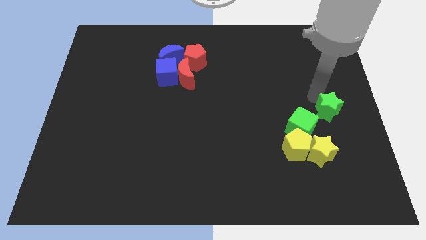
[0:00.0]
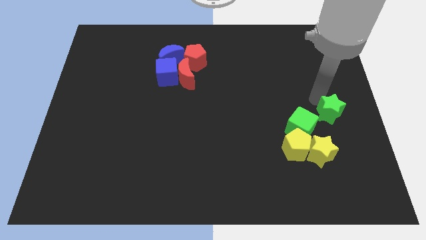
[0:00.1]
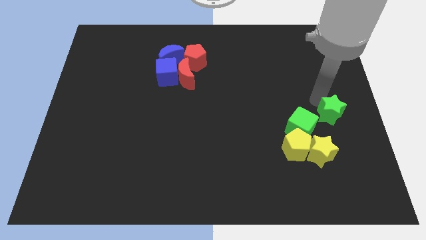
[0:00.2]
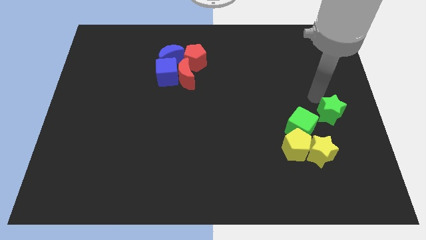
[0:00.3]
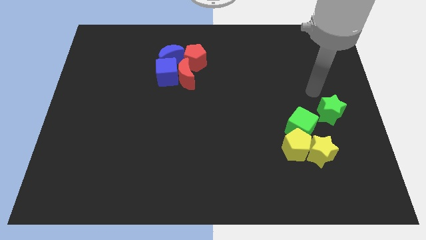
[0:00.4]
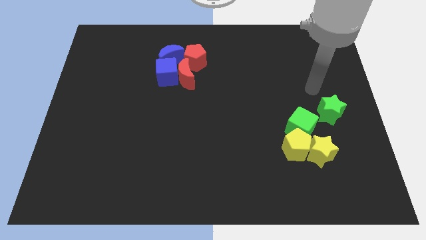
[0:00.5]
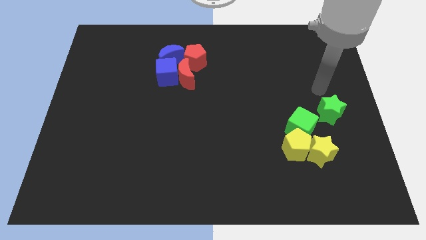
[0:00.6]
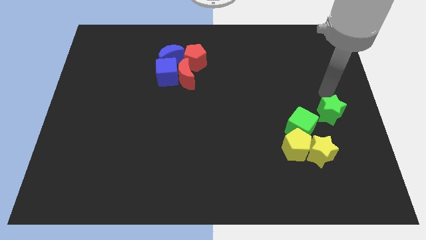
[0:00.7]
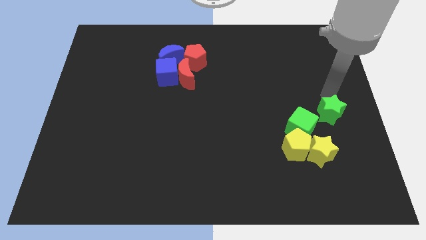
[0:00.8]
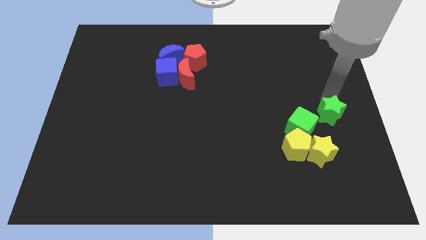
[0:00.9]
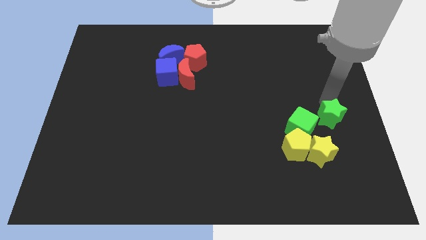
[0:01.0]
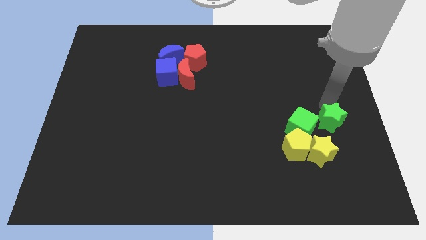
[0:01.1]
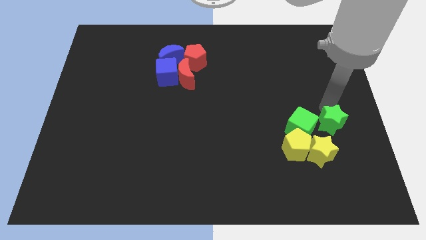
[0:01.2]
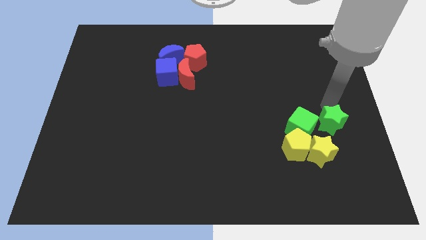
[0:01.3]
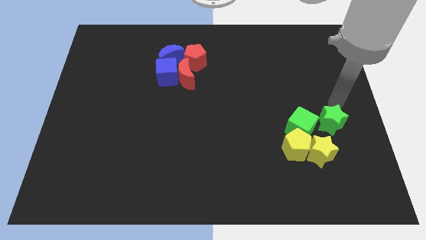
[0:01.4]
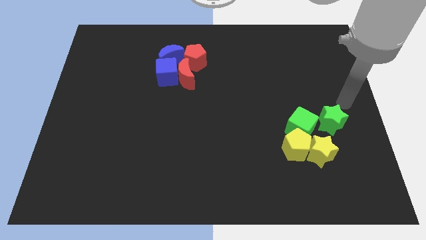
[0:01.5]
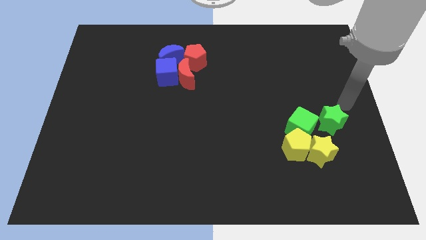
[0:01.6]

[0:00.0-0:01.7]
place the green star right to the green cube

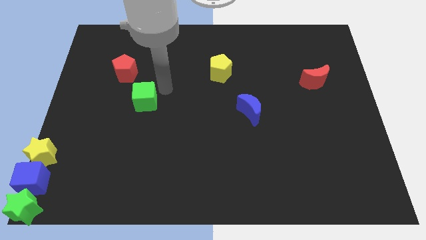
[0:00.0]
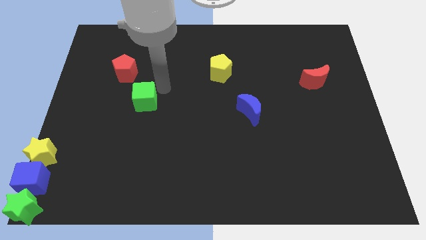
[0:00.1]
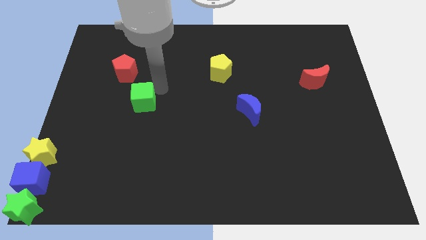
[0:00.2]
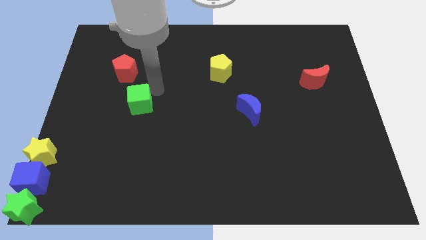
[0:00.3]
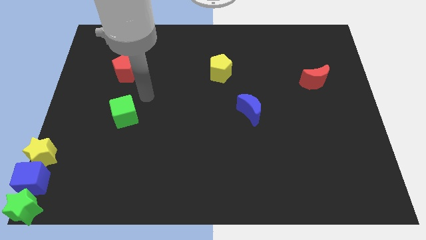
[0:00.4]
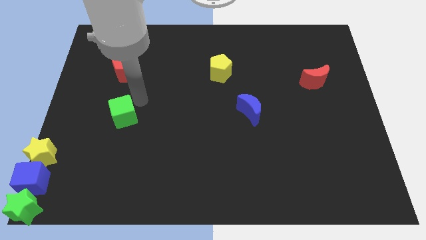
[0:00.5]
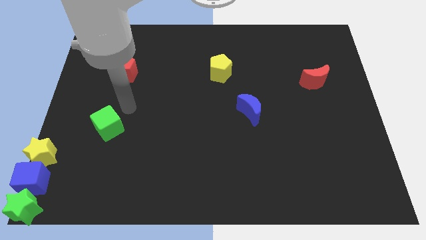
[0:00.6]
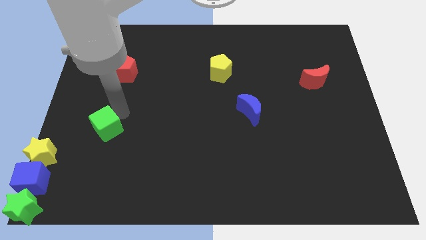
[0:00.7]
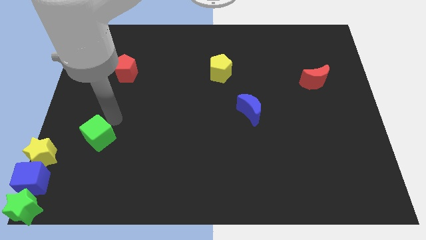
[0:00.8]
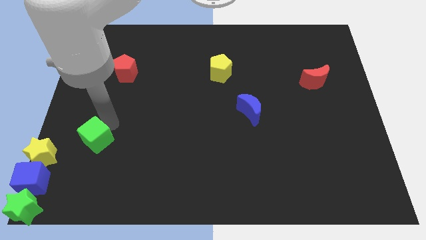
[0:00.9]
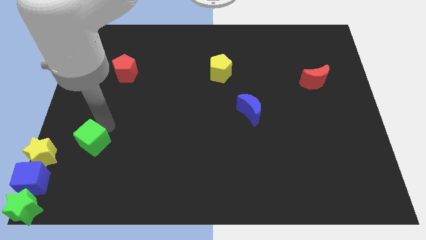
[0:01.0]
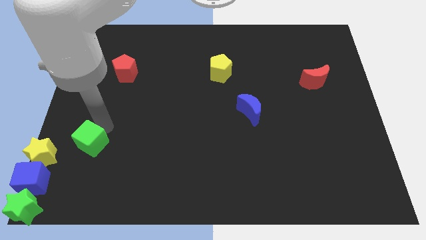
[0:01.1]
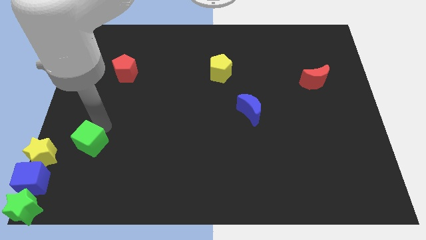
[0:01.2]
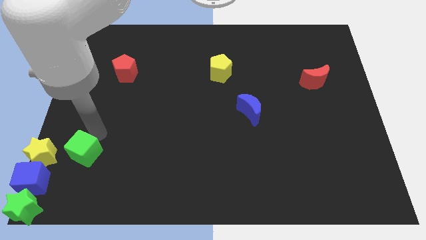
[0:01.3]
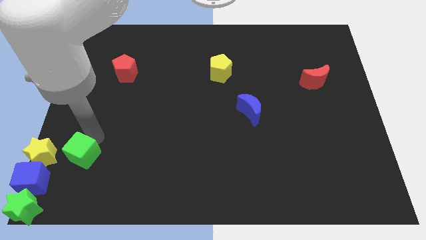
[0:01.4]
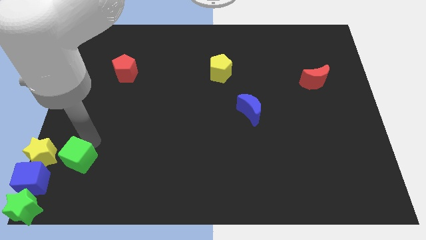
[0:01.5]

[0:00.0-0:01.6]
place green cube to the right of yellow star

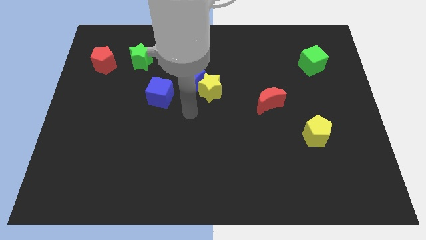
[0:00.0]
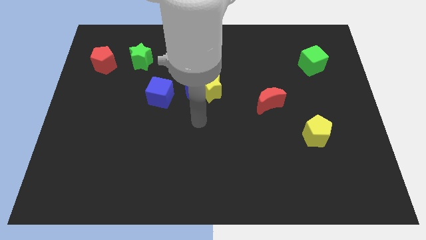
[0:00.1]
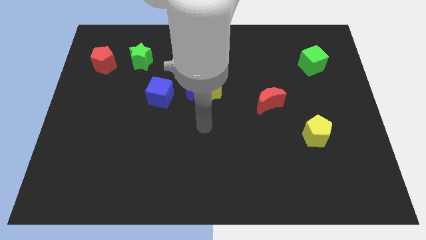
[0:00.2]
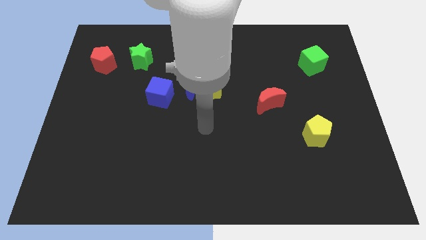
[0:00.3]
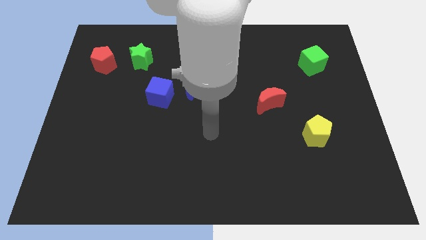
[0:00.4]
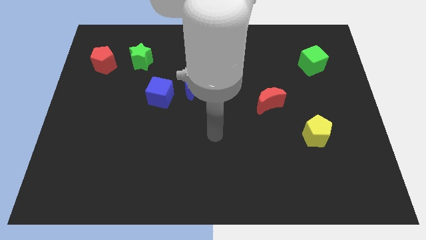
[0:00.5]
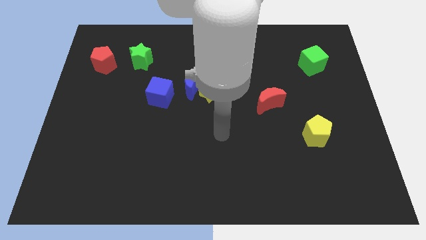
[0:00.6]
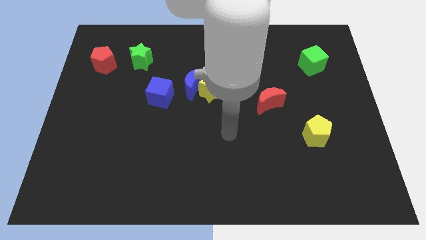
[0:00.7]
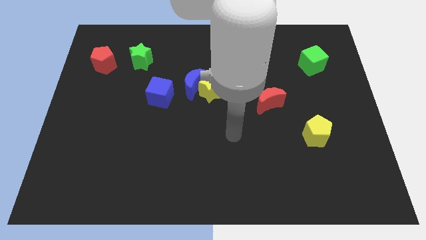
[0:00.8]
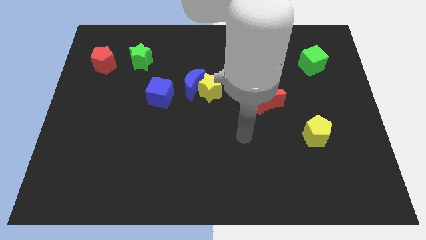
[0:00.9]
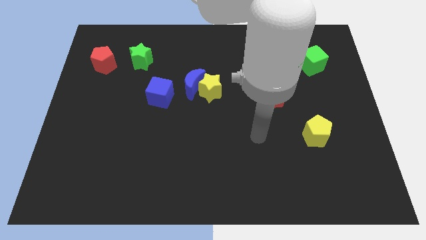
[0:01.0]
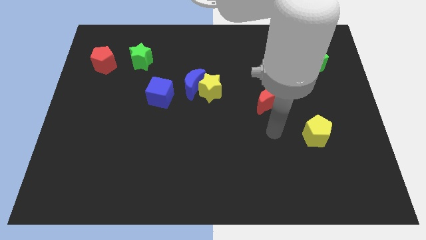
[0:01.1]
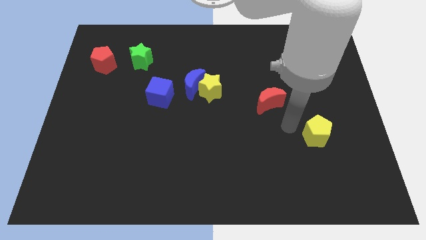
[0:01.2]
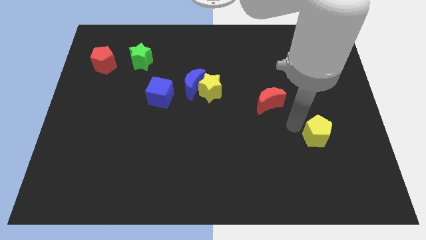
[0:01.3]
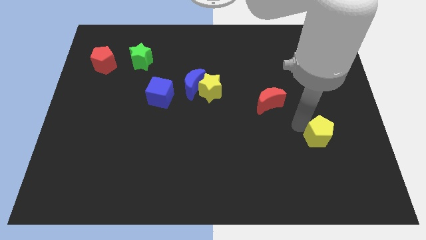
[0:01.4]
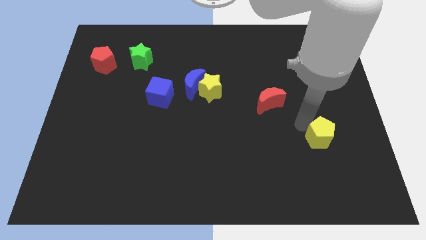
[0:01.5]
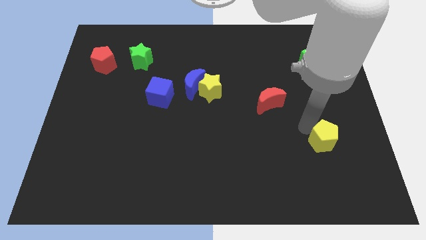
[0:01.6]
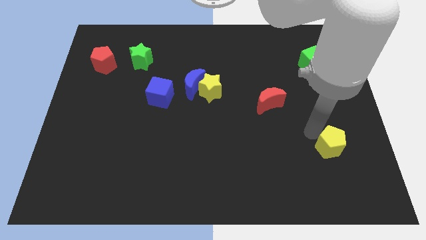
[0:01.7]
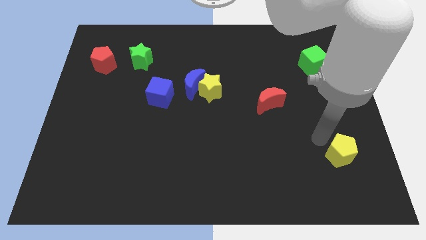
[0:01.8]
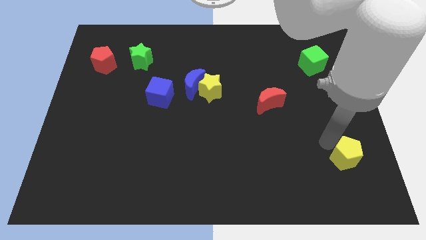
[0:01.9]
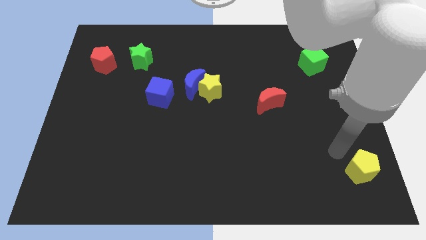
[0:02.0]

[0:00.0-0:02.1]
slide the yellow pentagon towards the bottom right

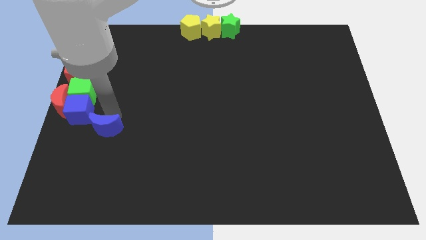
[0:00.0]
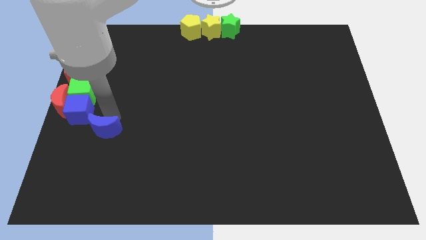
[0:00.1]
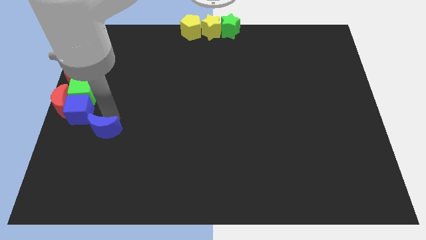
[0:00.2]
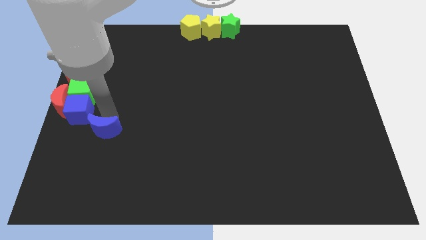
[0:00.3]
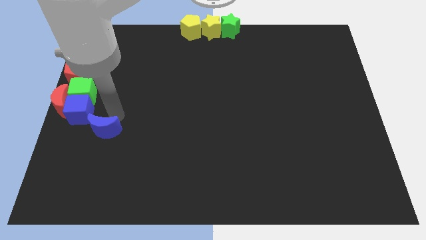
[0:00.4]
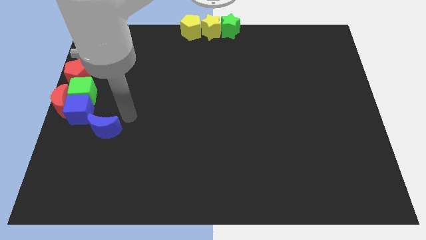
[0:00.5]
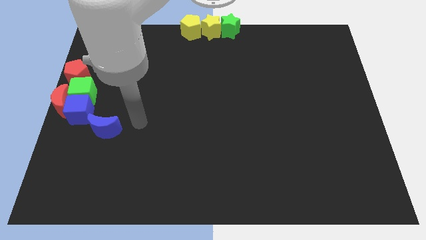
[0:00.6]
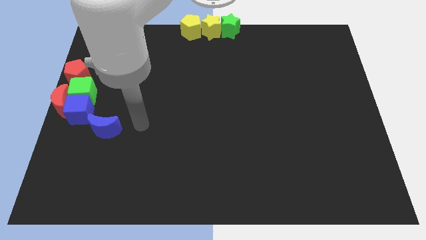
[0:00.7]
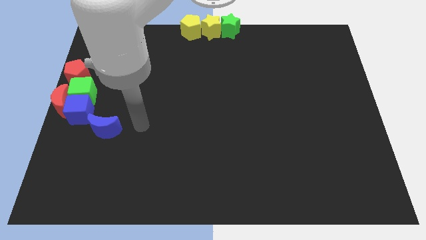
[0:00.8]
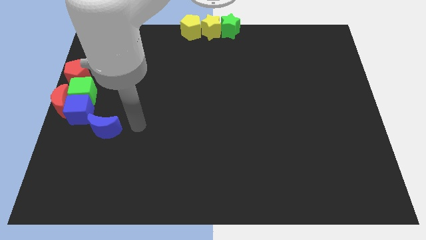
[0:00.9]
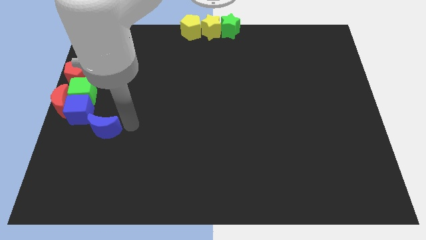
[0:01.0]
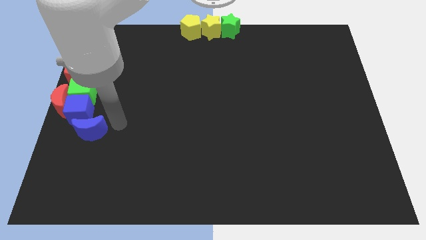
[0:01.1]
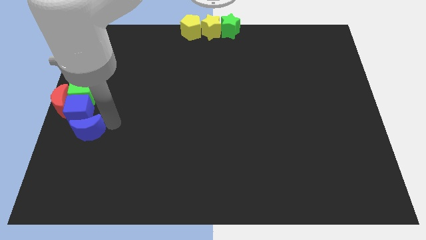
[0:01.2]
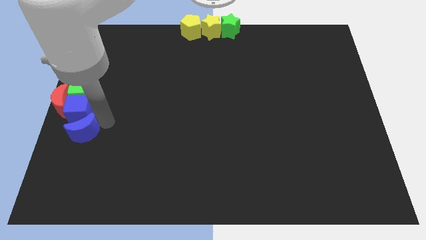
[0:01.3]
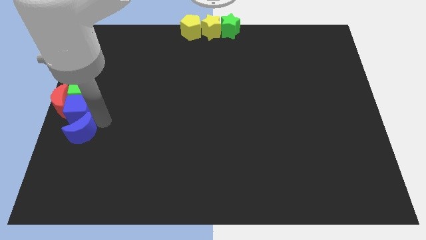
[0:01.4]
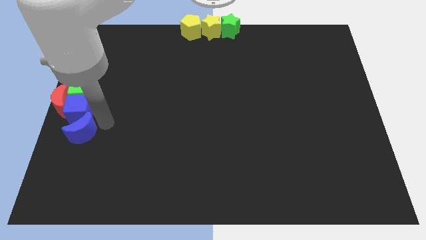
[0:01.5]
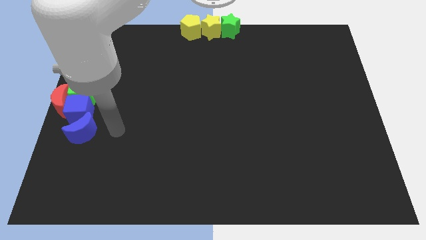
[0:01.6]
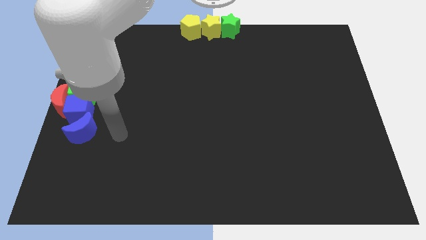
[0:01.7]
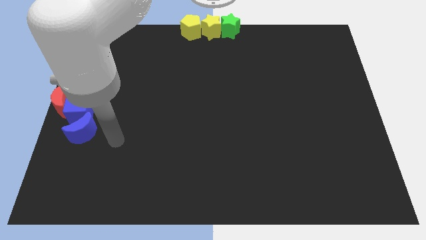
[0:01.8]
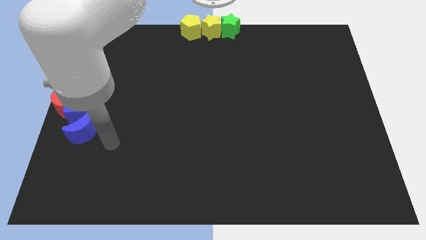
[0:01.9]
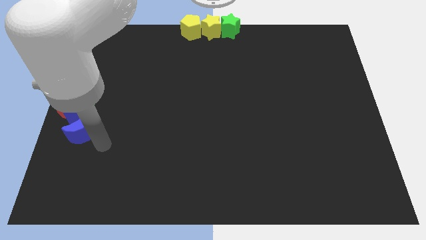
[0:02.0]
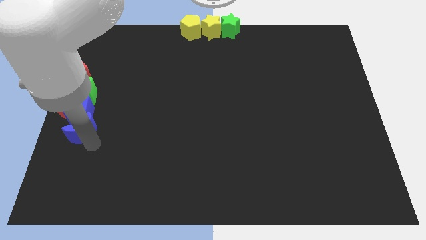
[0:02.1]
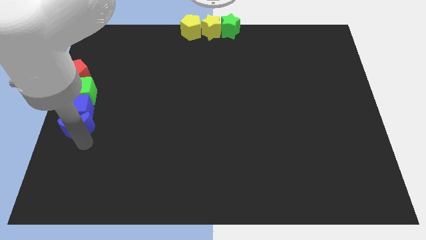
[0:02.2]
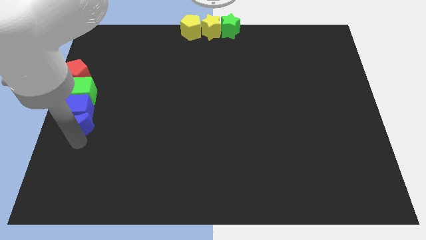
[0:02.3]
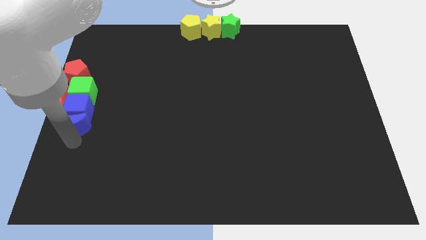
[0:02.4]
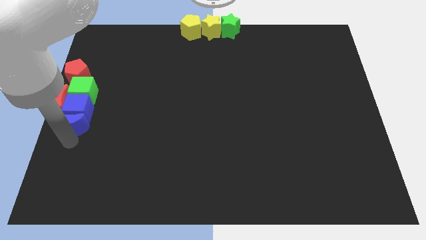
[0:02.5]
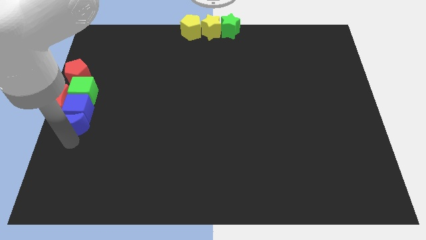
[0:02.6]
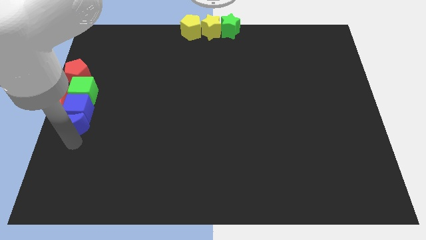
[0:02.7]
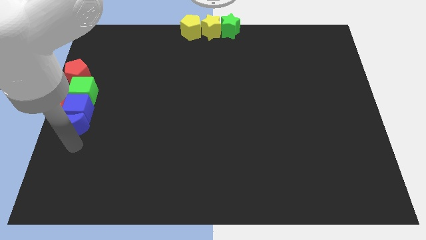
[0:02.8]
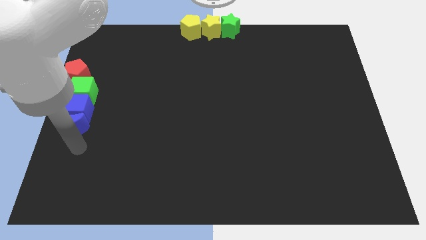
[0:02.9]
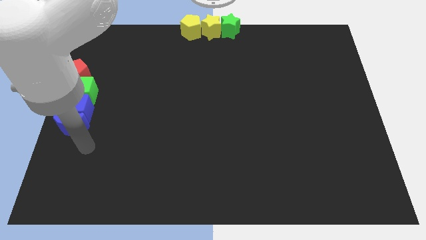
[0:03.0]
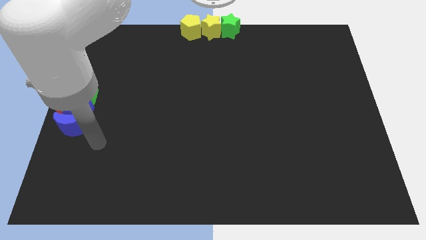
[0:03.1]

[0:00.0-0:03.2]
push the blue crescent bottom to the blue cube

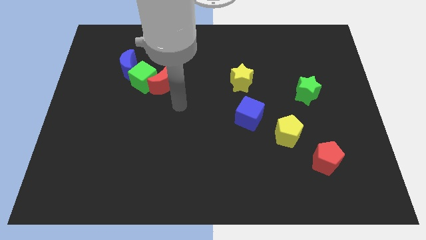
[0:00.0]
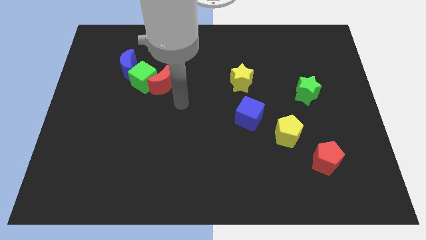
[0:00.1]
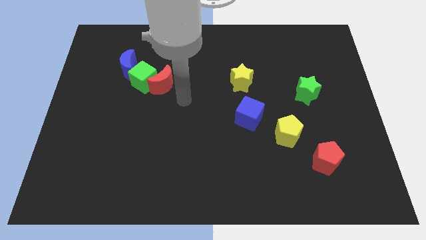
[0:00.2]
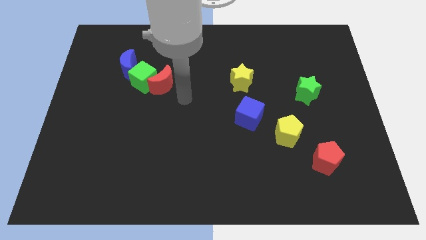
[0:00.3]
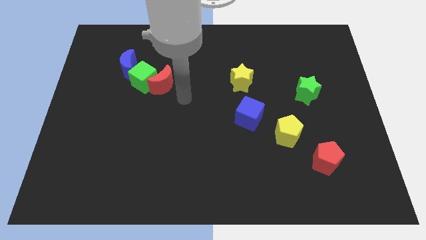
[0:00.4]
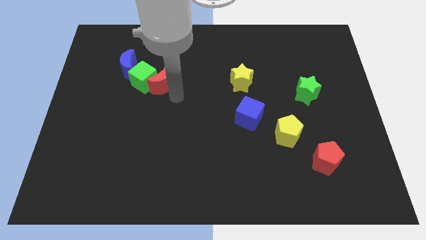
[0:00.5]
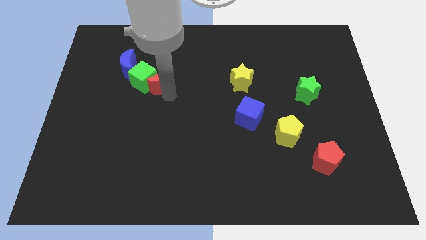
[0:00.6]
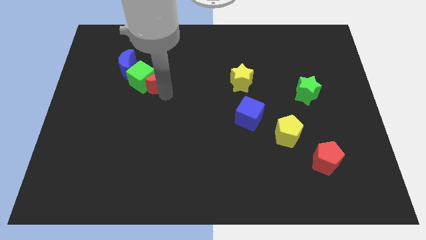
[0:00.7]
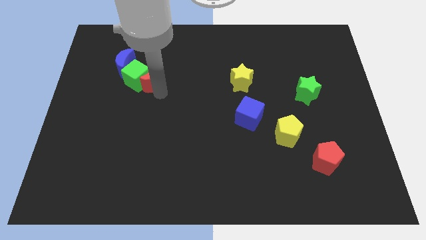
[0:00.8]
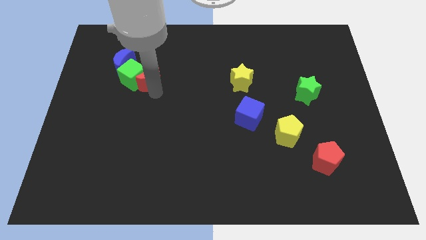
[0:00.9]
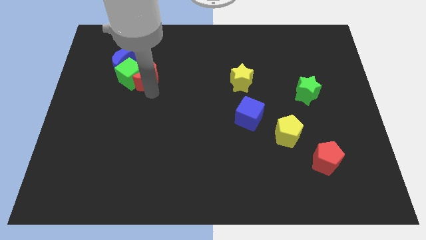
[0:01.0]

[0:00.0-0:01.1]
push the red crescent into the green cube
